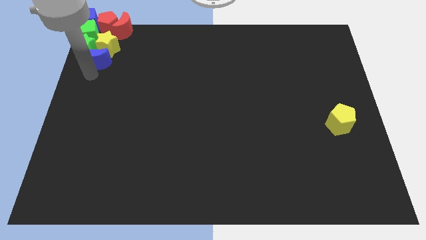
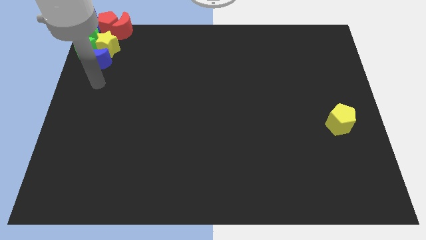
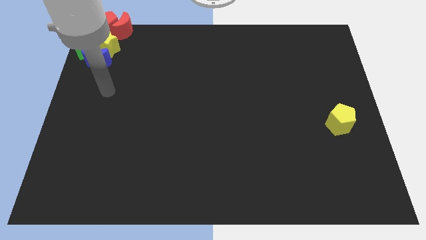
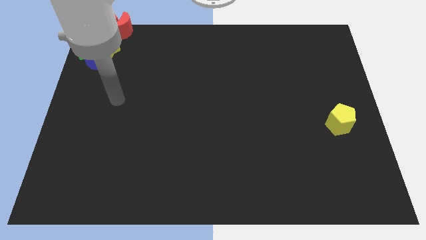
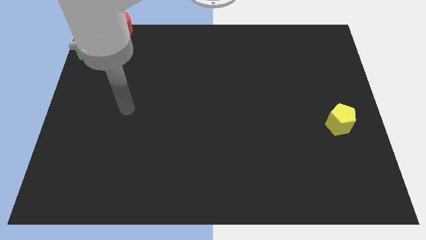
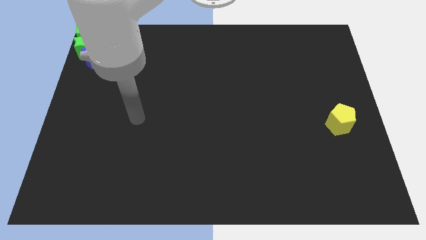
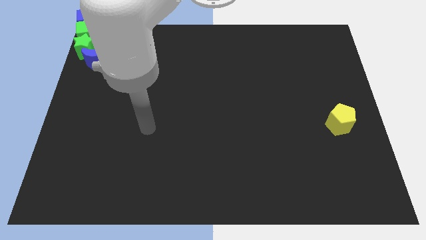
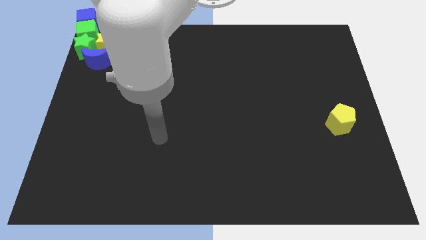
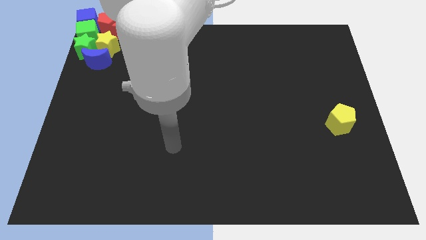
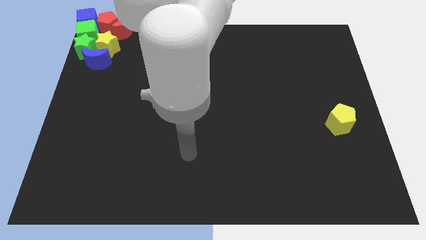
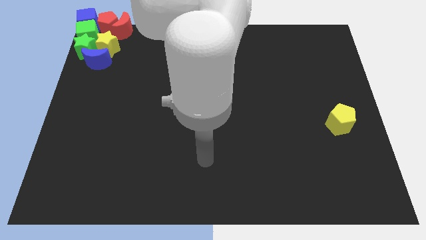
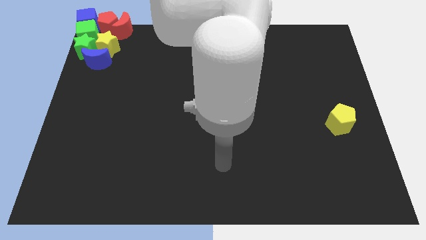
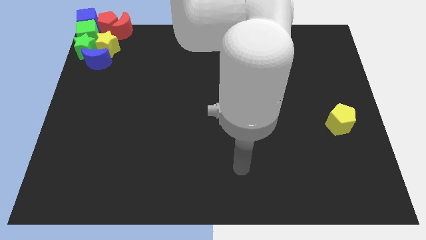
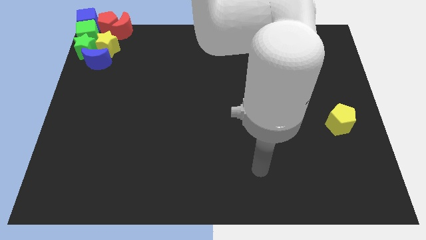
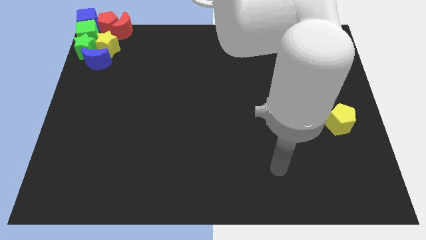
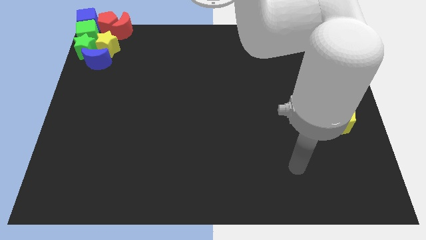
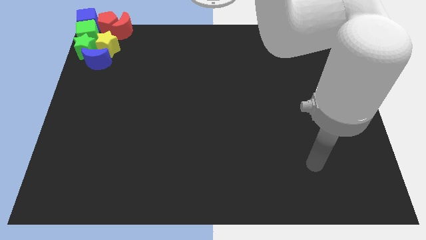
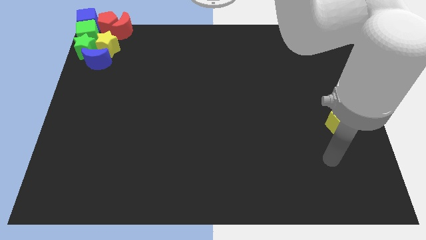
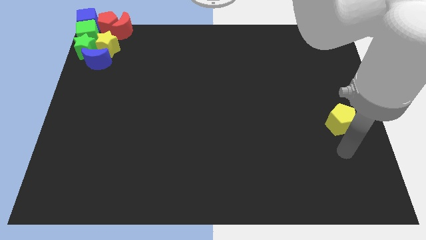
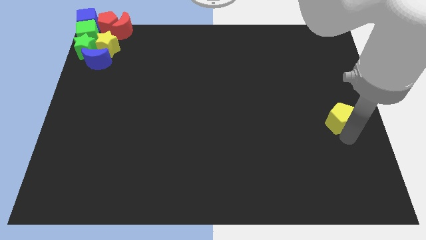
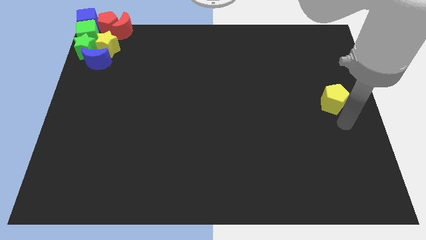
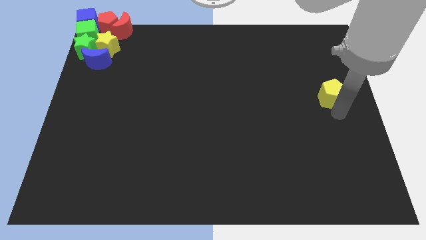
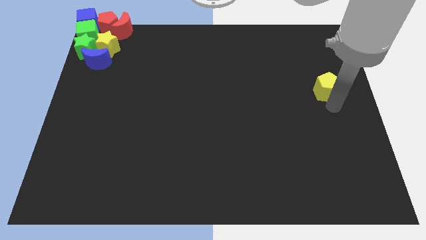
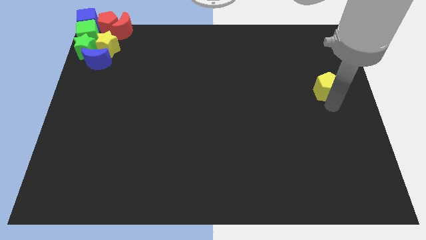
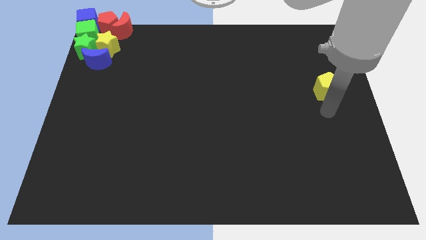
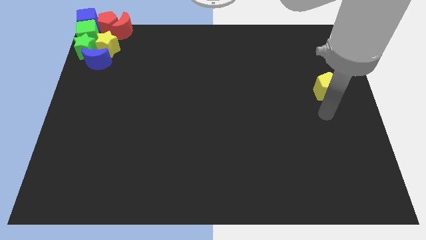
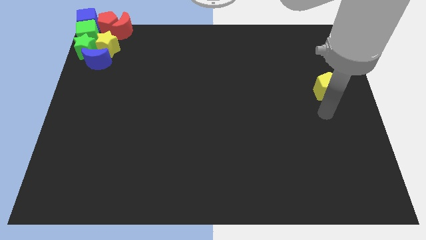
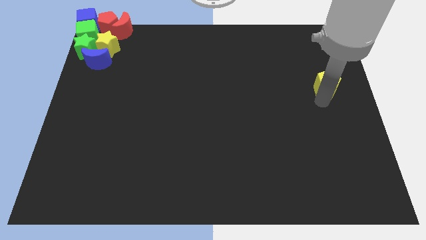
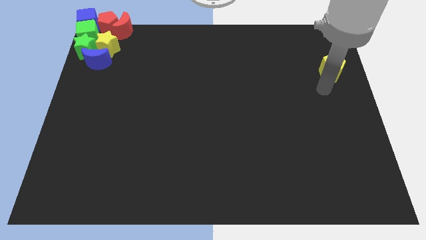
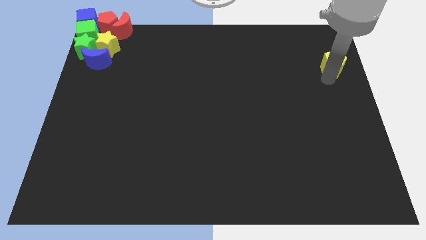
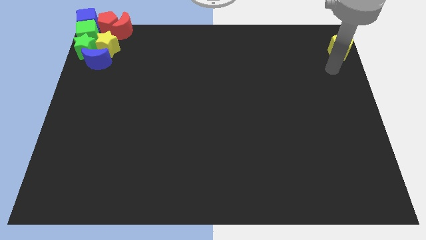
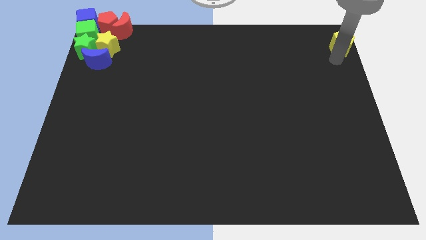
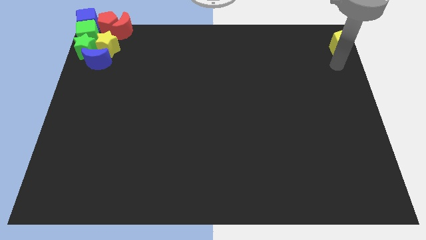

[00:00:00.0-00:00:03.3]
move yellow pentagon towards right top corner of the board

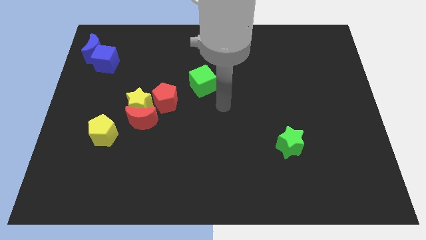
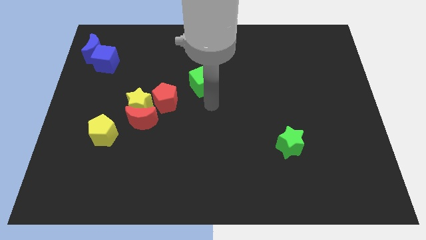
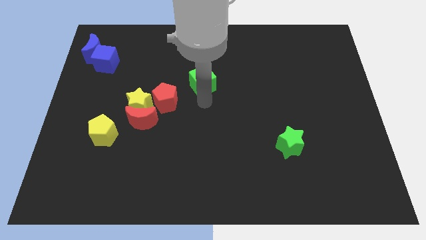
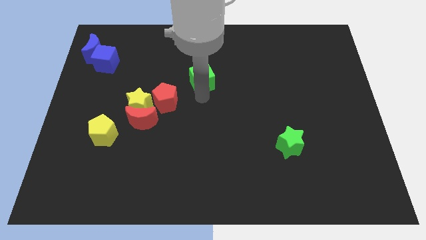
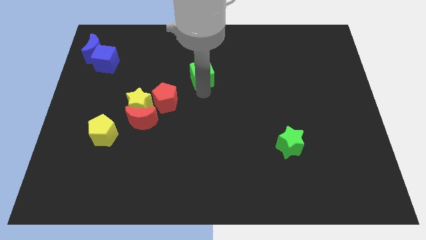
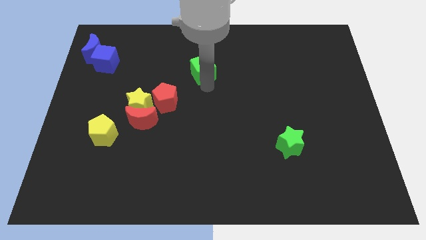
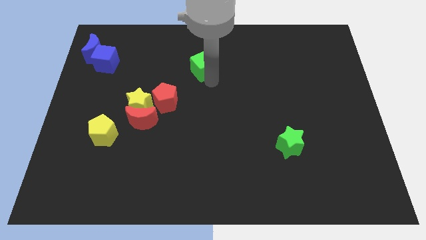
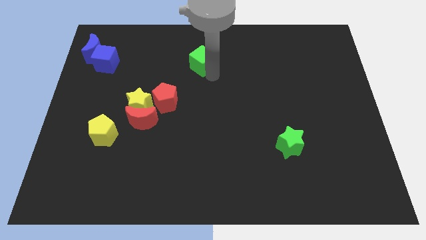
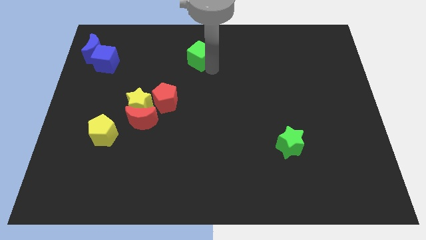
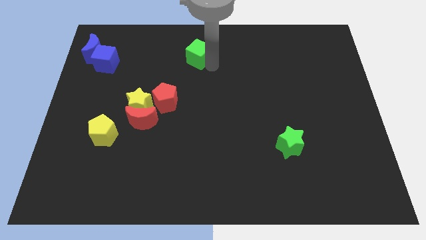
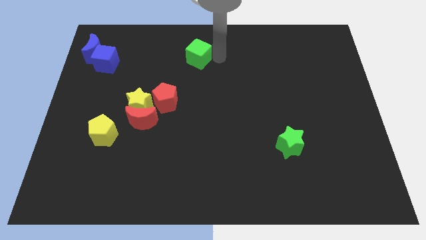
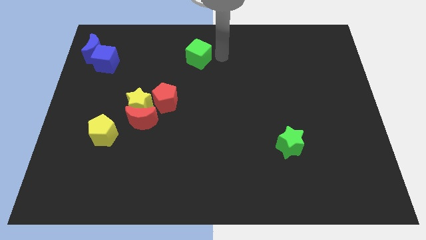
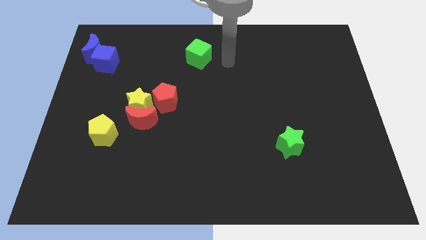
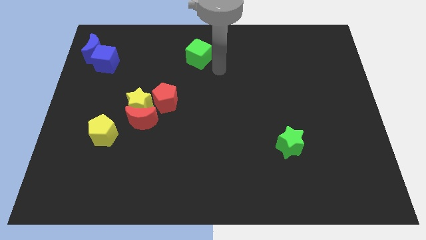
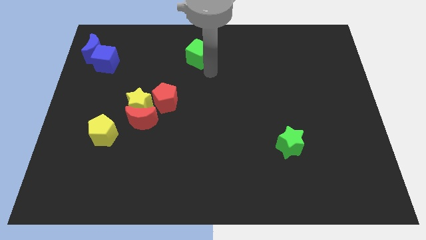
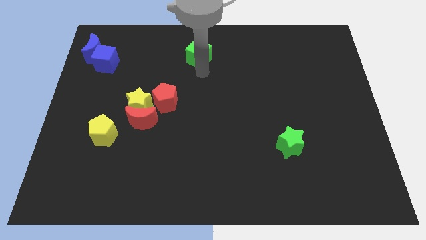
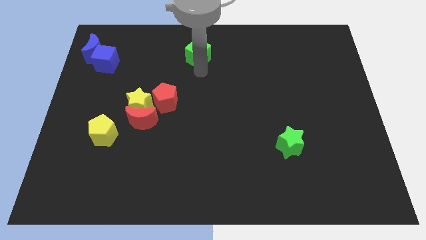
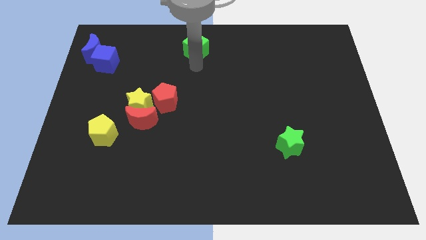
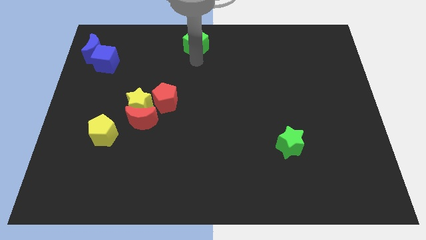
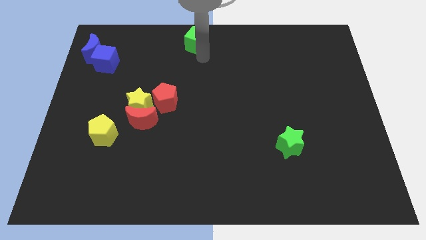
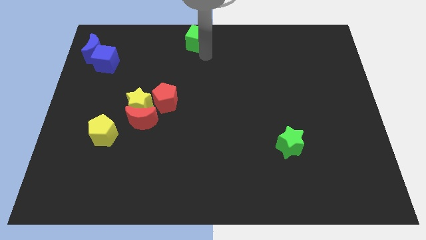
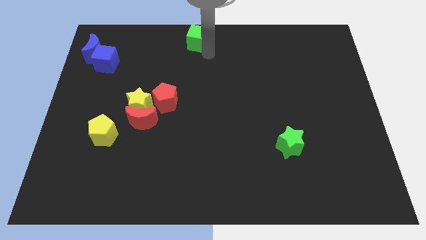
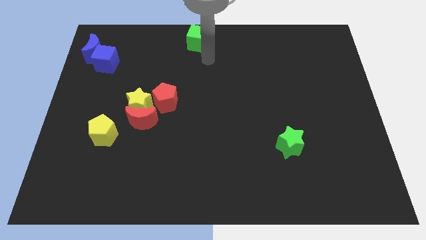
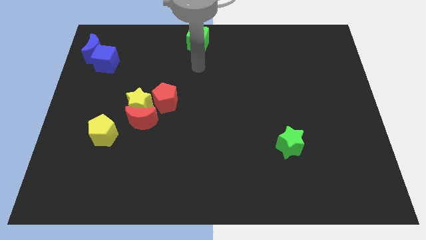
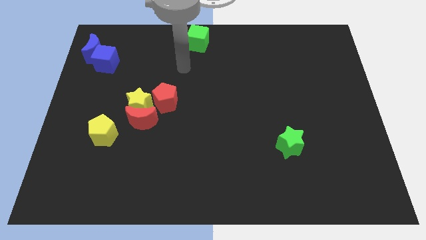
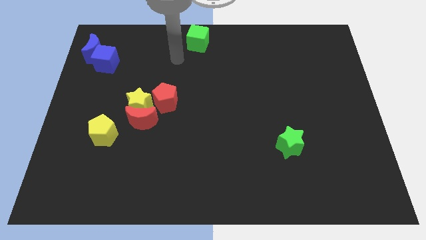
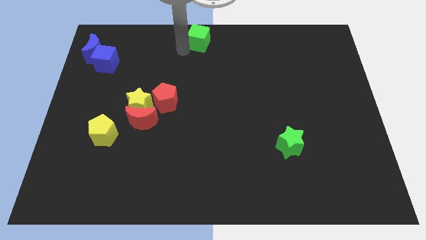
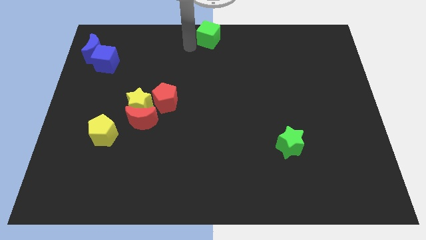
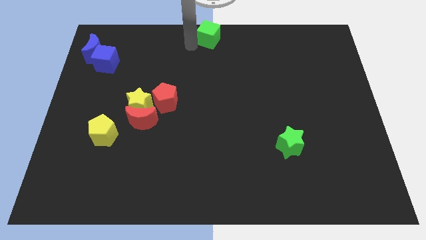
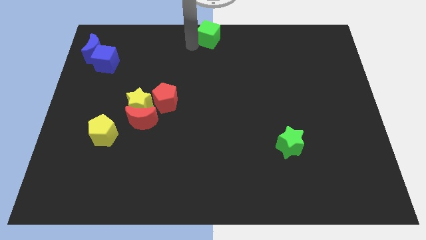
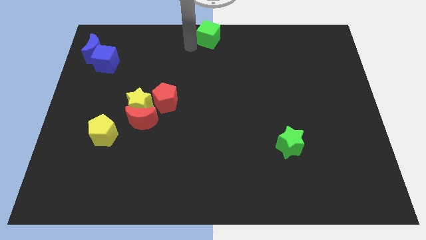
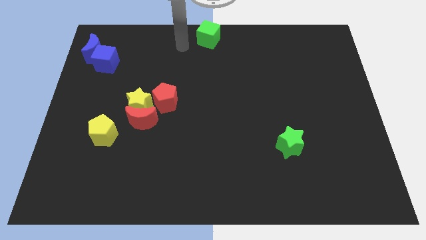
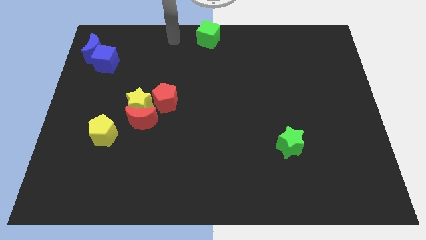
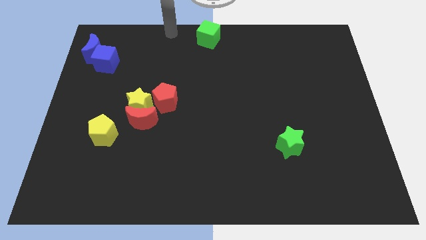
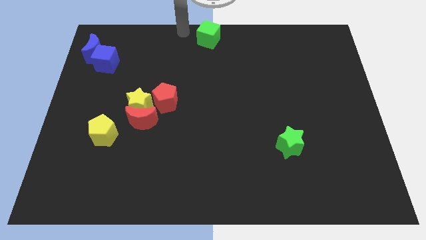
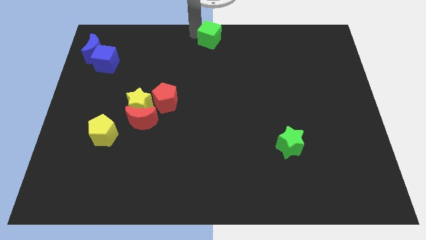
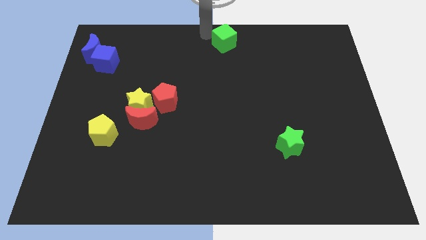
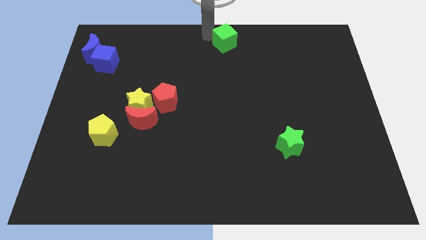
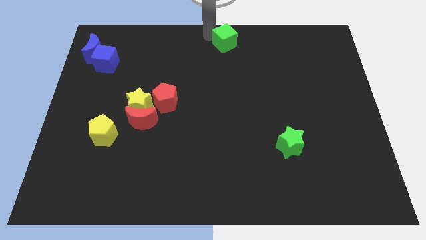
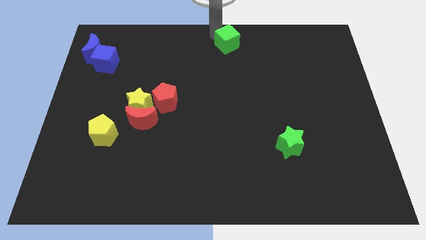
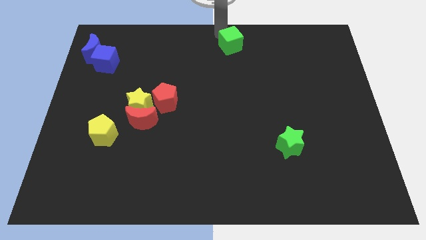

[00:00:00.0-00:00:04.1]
push green cube towards top center of the board

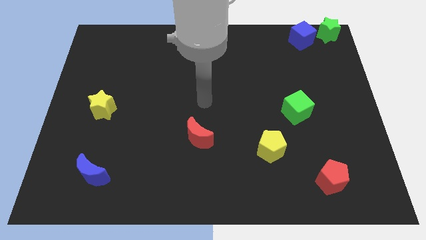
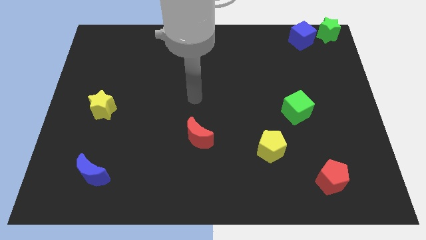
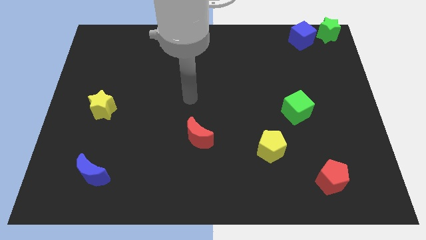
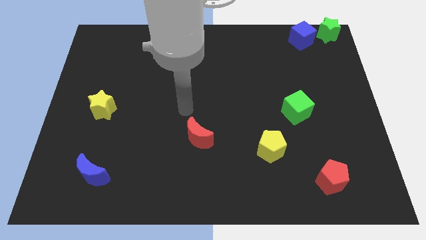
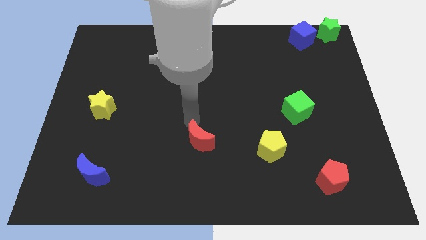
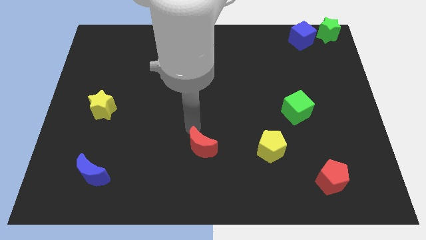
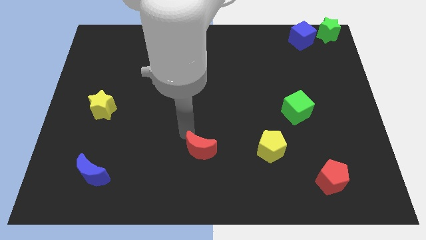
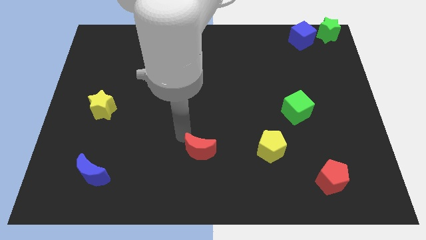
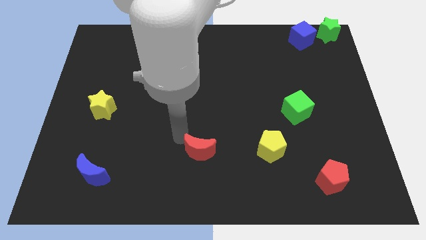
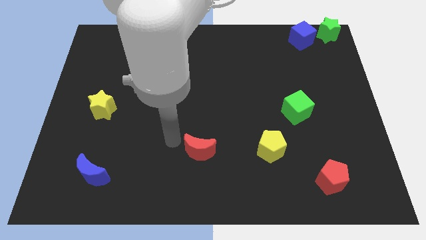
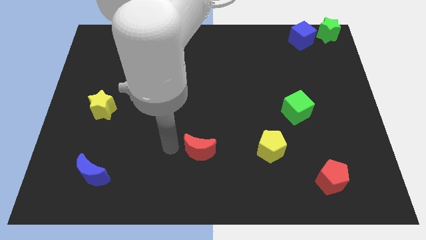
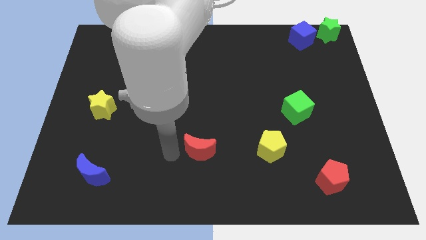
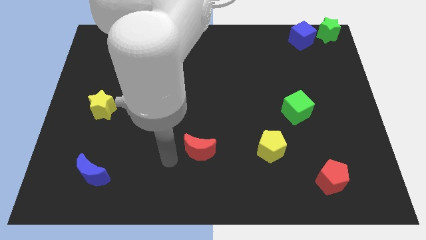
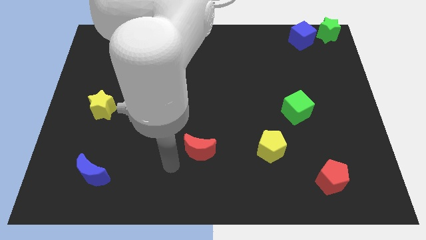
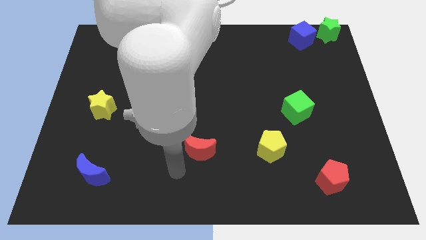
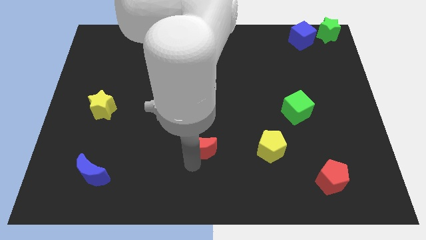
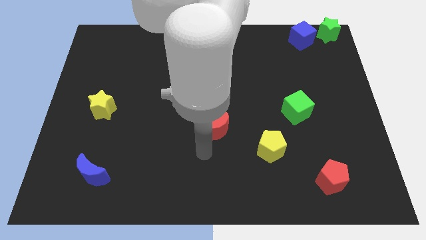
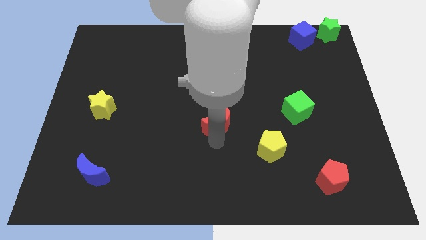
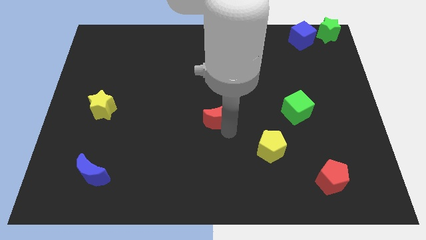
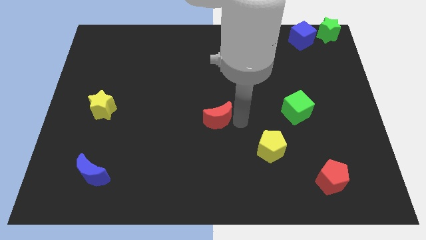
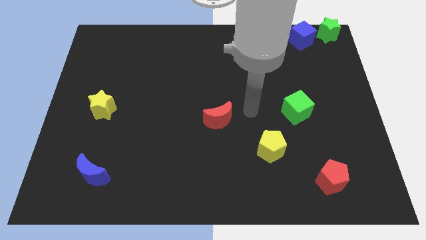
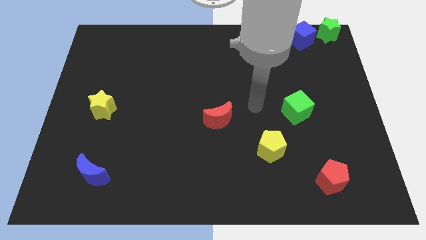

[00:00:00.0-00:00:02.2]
place the red crescent at the center of the board
